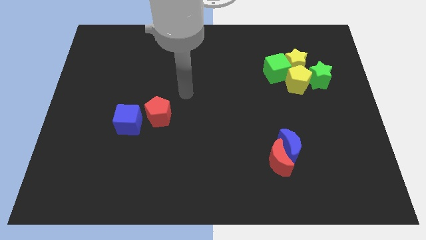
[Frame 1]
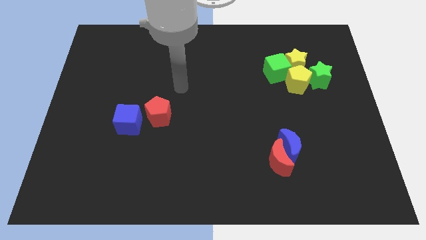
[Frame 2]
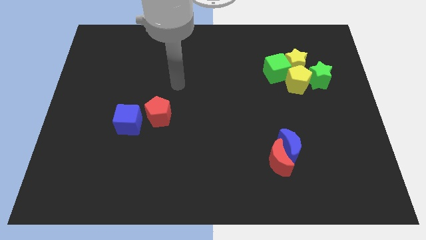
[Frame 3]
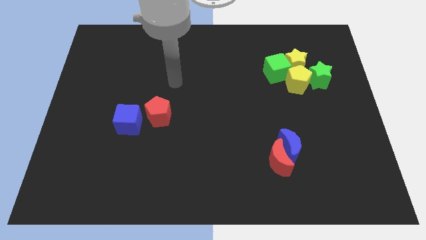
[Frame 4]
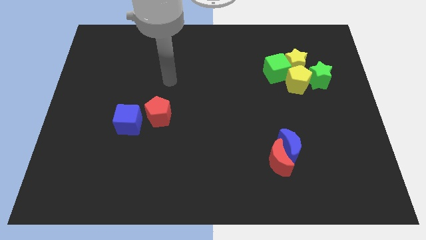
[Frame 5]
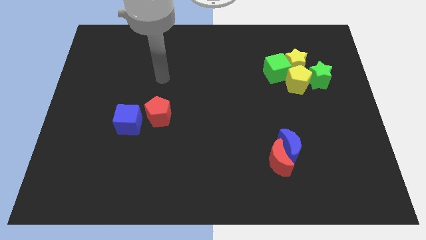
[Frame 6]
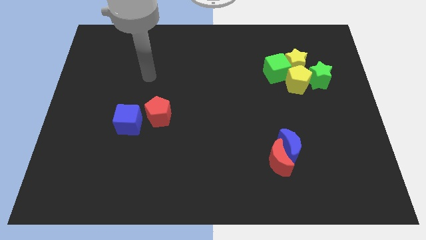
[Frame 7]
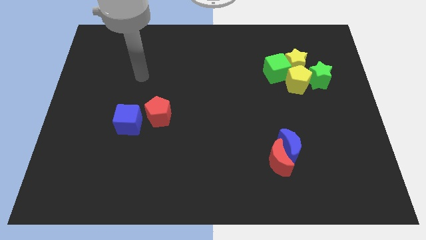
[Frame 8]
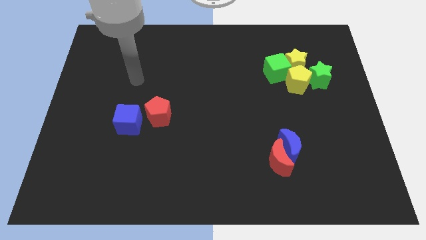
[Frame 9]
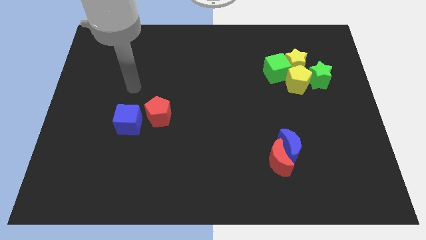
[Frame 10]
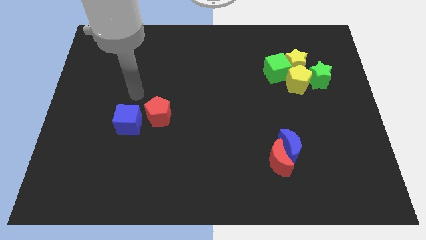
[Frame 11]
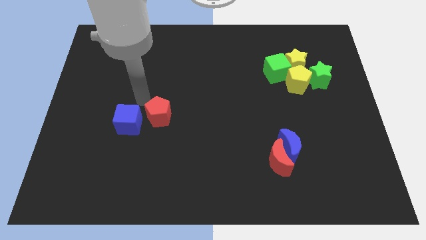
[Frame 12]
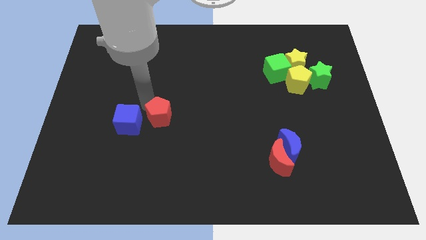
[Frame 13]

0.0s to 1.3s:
touch the top left side of the red pentagon

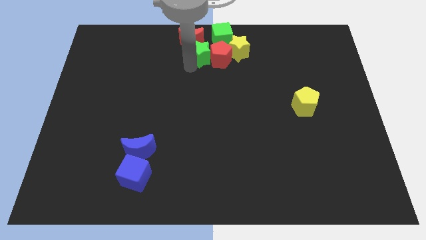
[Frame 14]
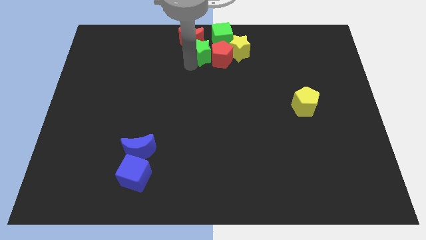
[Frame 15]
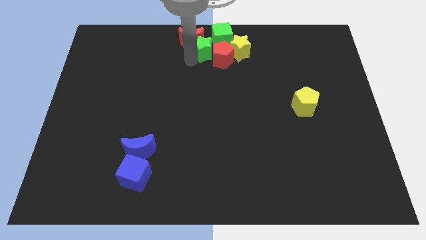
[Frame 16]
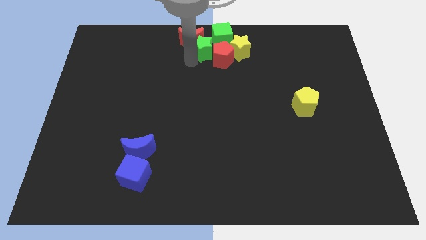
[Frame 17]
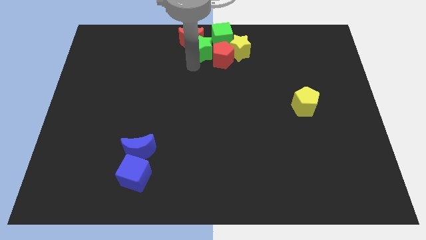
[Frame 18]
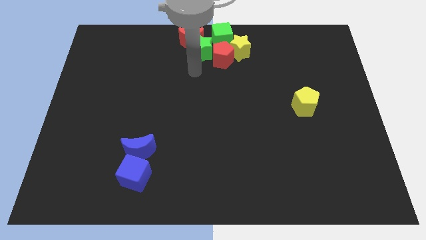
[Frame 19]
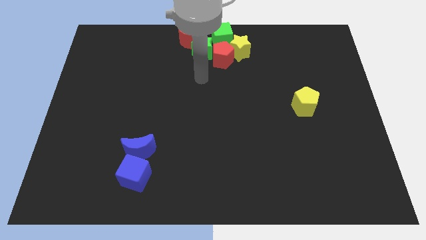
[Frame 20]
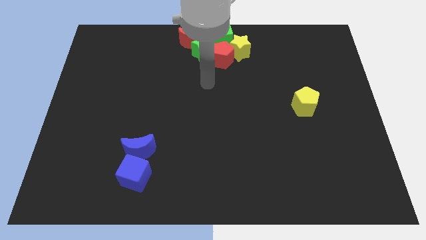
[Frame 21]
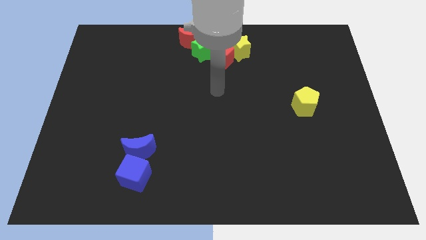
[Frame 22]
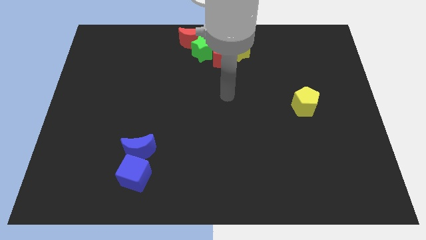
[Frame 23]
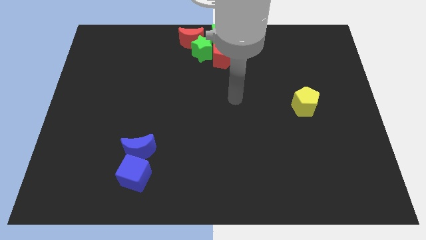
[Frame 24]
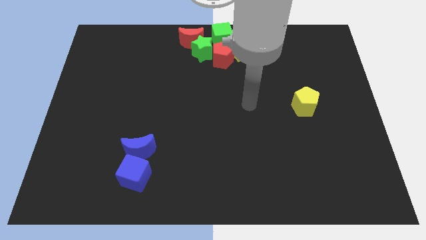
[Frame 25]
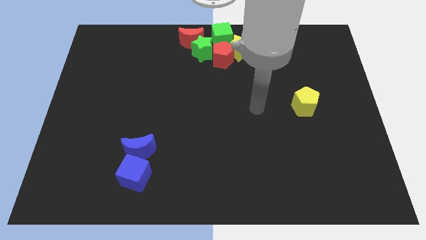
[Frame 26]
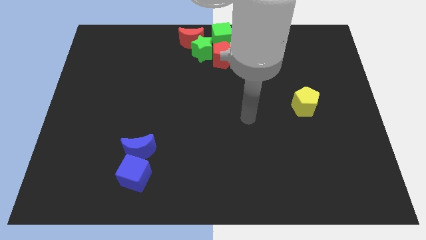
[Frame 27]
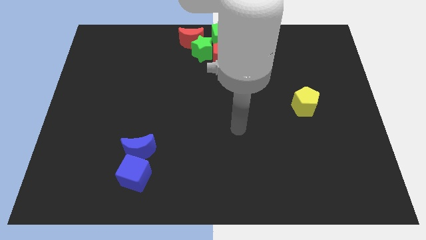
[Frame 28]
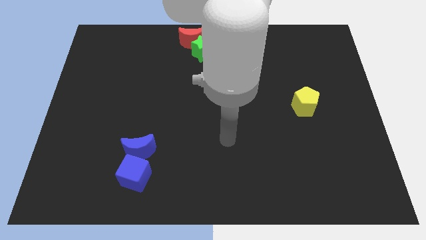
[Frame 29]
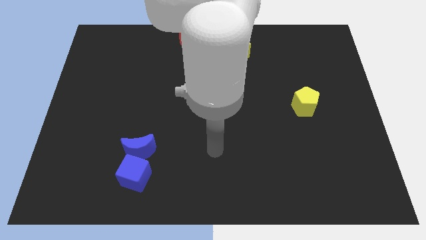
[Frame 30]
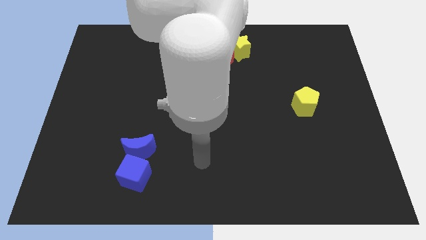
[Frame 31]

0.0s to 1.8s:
move your arm away from the green star

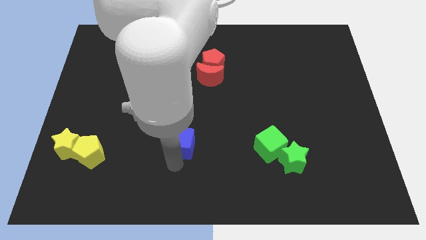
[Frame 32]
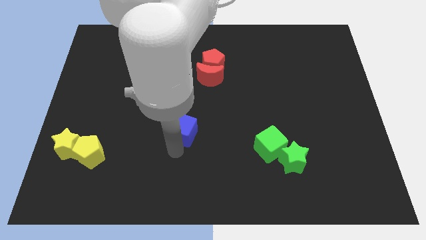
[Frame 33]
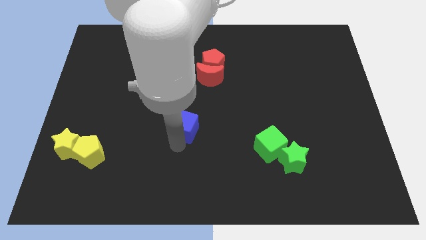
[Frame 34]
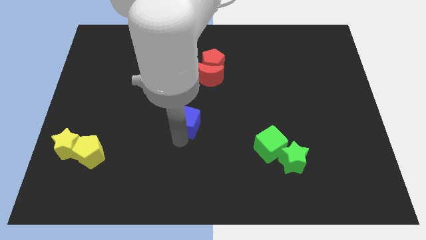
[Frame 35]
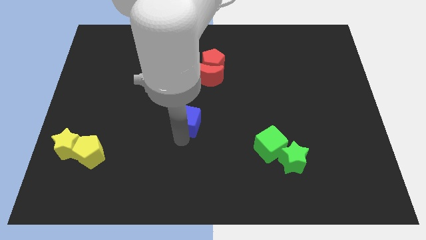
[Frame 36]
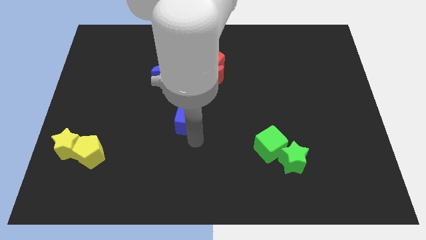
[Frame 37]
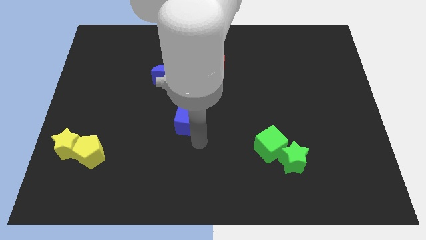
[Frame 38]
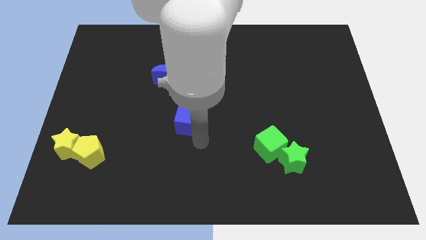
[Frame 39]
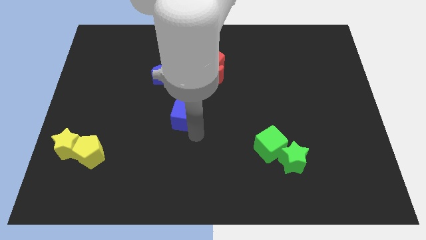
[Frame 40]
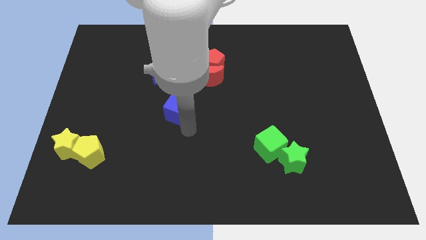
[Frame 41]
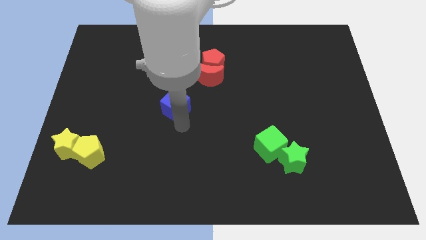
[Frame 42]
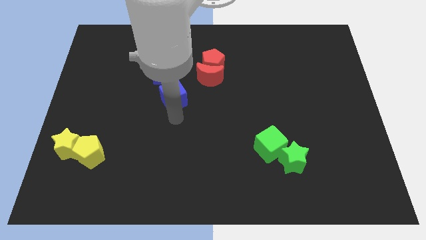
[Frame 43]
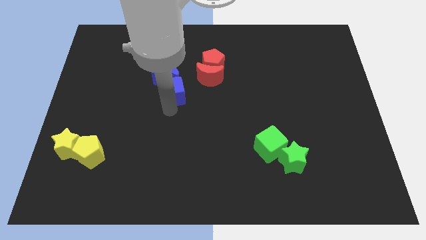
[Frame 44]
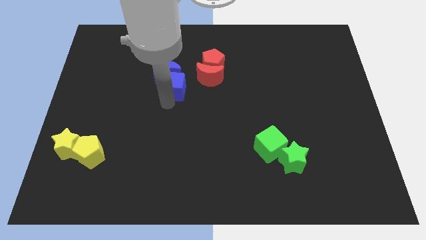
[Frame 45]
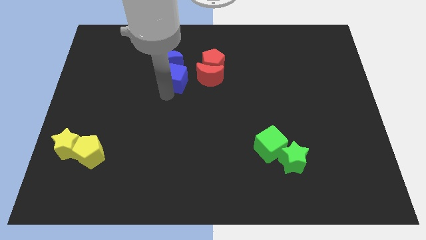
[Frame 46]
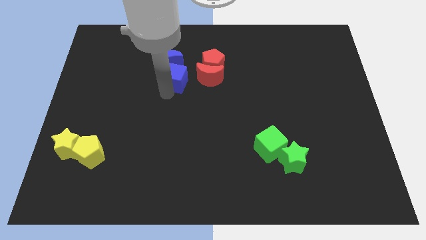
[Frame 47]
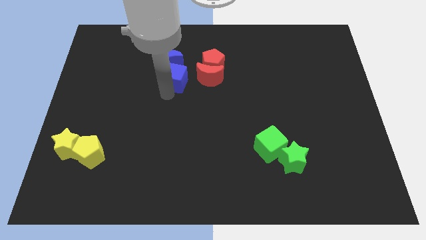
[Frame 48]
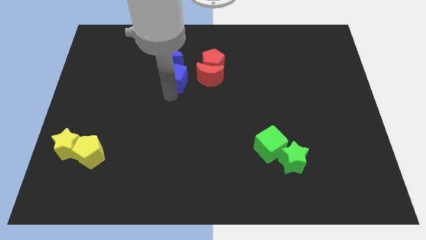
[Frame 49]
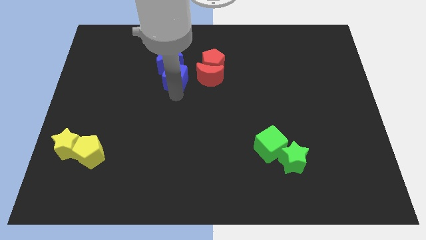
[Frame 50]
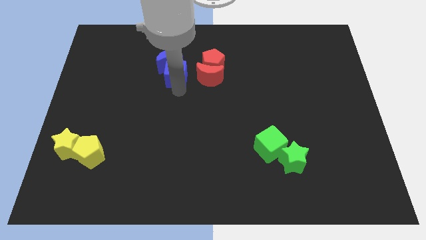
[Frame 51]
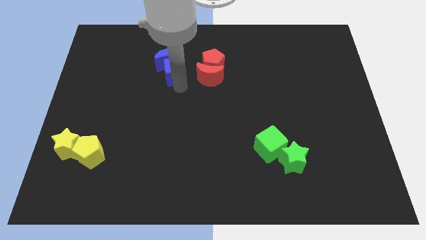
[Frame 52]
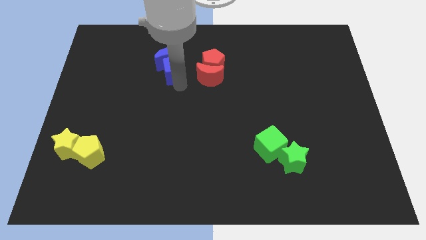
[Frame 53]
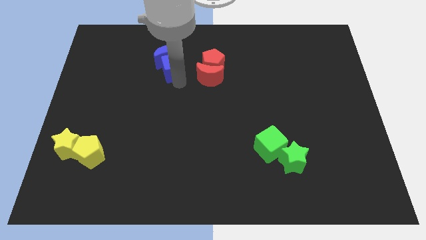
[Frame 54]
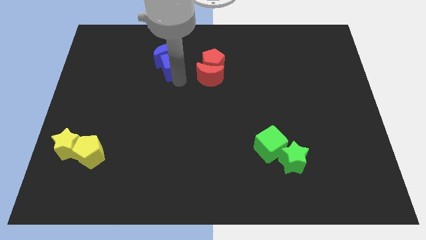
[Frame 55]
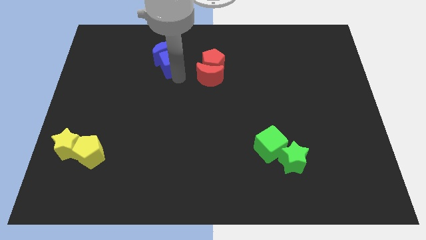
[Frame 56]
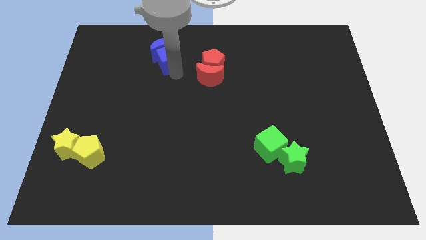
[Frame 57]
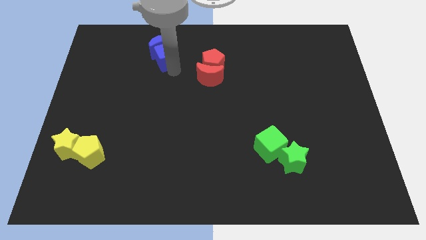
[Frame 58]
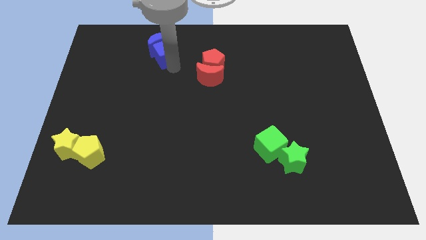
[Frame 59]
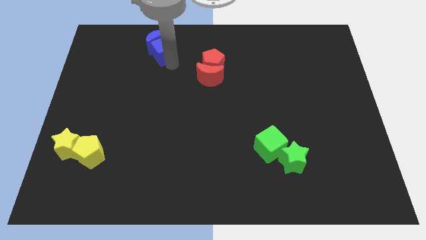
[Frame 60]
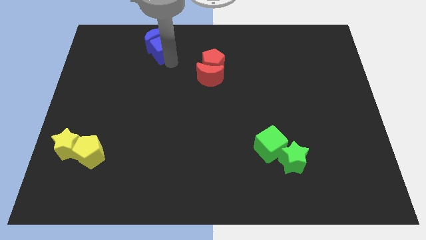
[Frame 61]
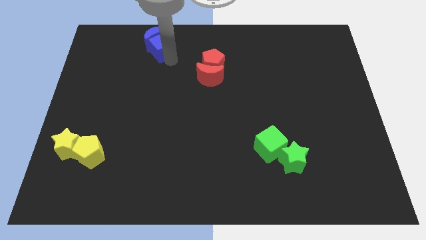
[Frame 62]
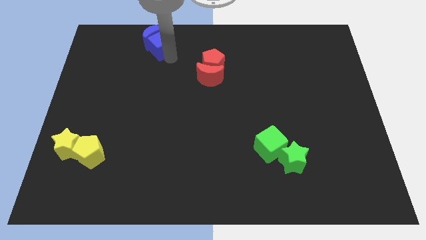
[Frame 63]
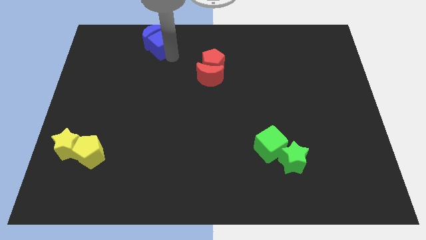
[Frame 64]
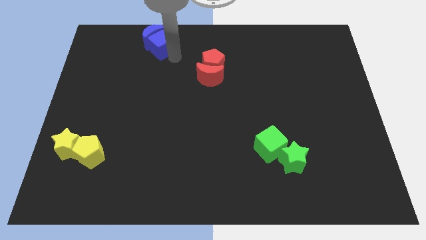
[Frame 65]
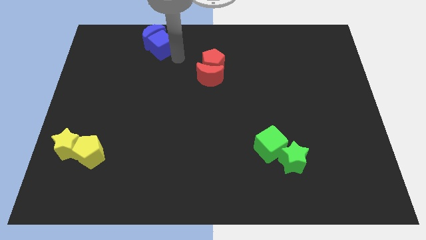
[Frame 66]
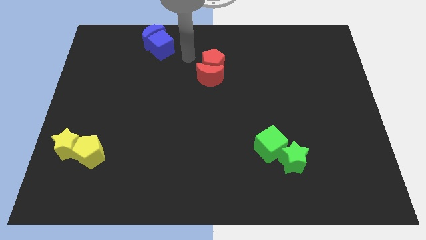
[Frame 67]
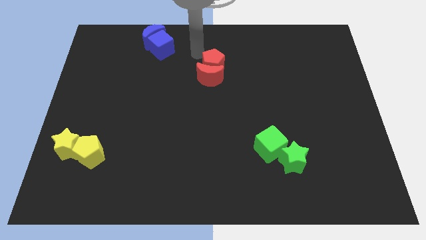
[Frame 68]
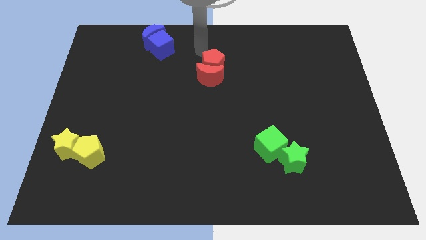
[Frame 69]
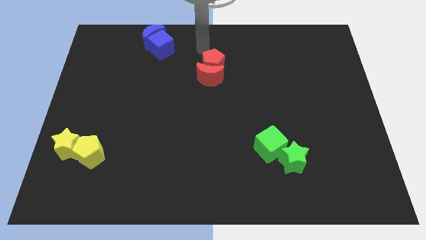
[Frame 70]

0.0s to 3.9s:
push the blue cube into the blue crescent

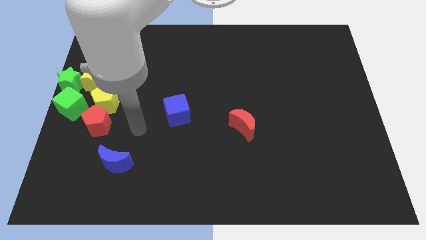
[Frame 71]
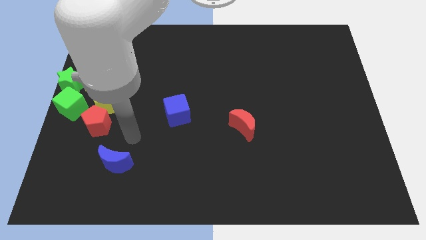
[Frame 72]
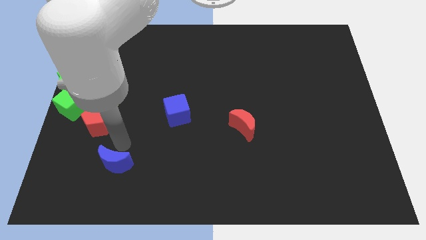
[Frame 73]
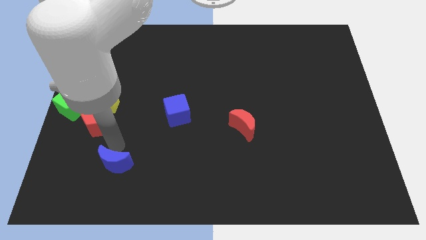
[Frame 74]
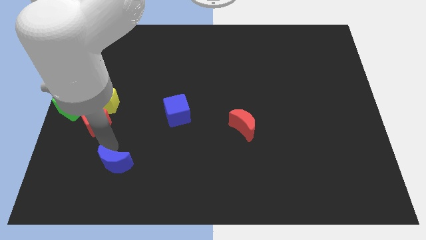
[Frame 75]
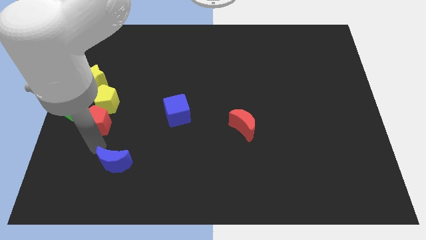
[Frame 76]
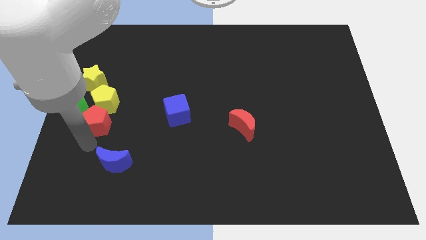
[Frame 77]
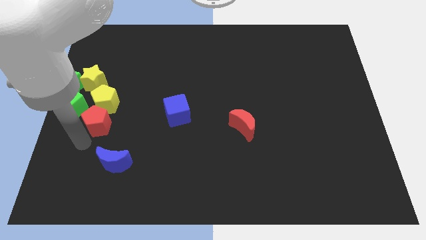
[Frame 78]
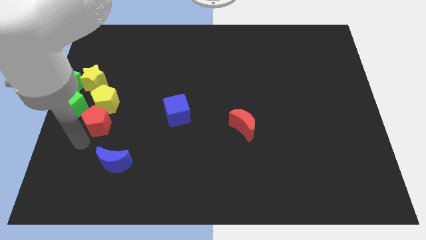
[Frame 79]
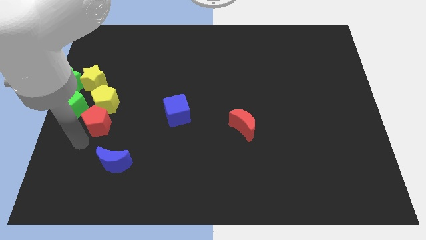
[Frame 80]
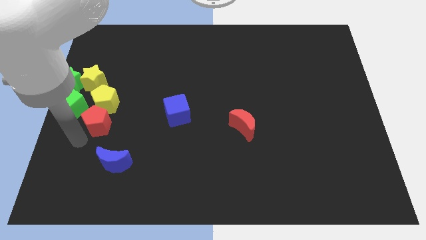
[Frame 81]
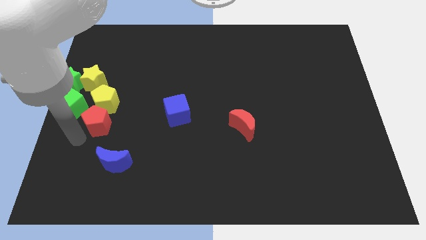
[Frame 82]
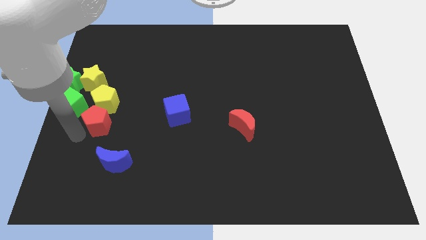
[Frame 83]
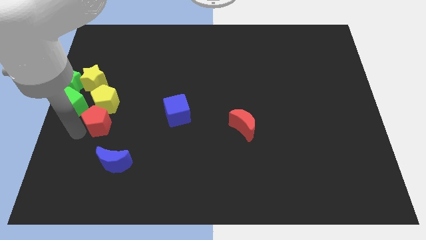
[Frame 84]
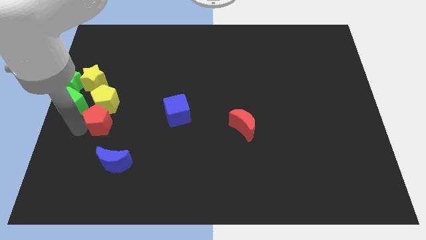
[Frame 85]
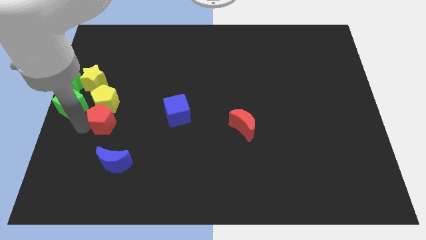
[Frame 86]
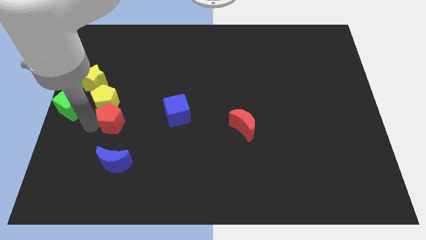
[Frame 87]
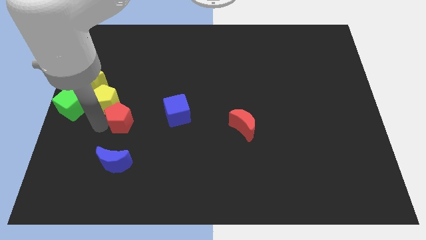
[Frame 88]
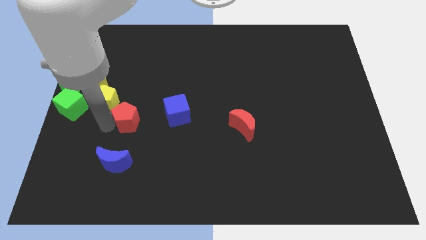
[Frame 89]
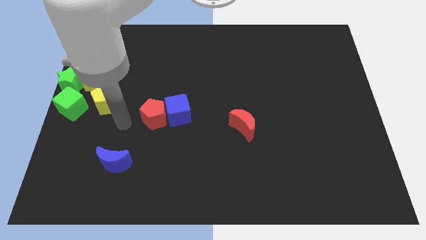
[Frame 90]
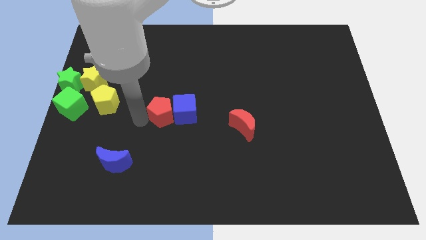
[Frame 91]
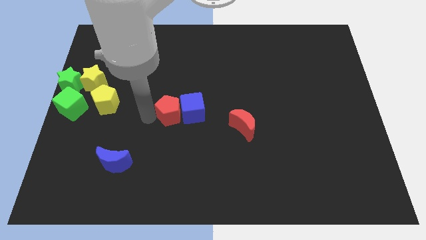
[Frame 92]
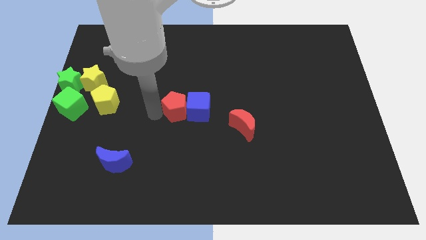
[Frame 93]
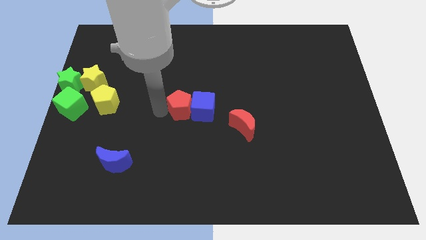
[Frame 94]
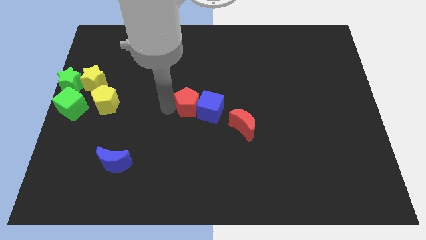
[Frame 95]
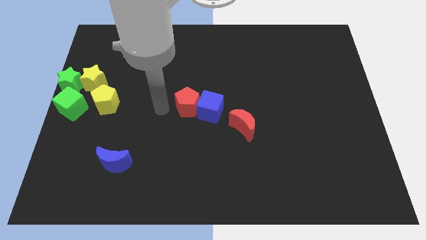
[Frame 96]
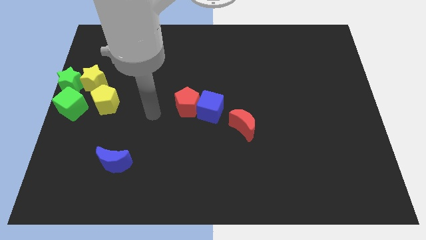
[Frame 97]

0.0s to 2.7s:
push the red pentagon into the blue cube
